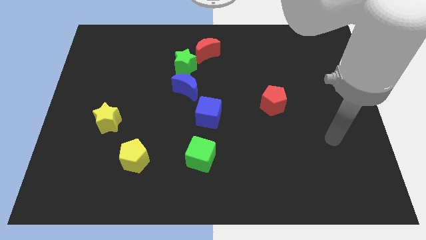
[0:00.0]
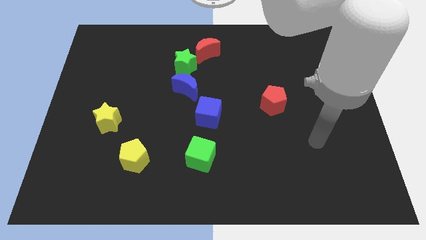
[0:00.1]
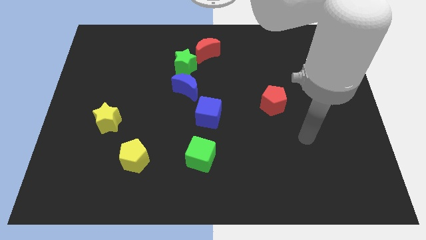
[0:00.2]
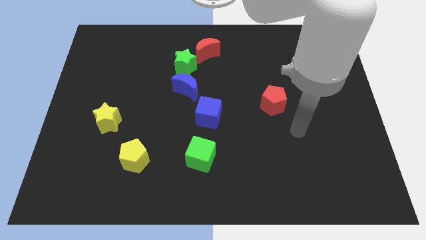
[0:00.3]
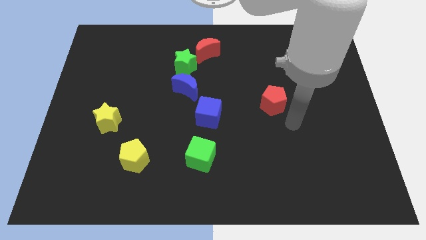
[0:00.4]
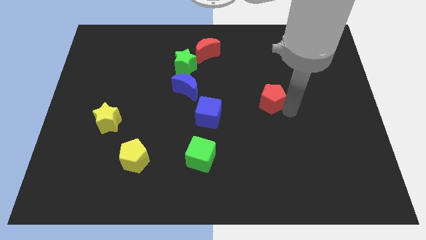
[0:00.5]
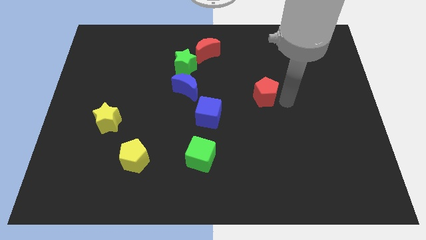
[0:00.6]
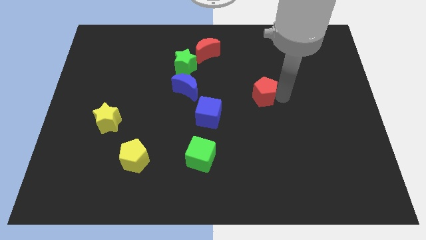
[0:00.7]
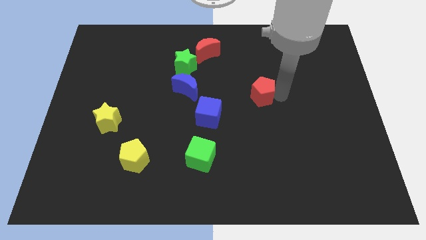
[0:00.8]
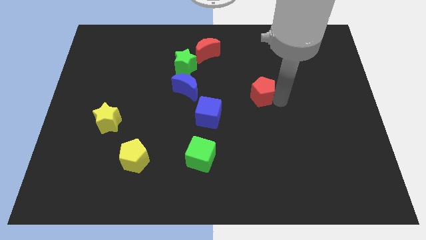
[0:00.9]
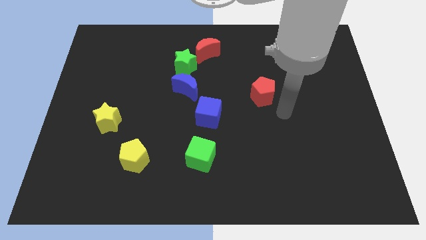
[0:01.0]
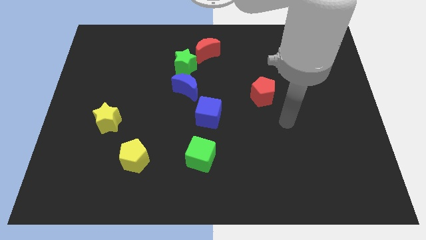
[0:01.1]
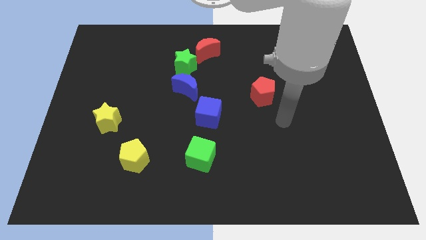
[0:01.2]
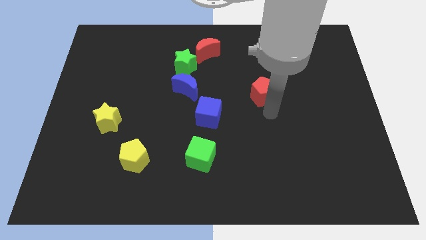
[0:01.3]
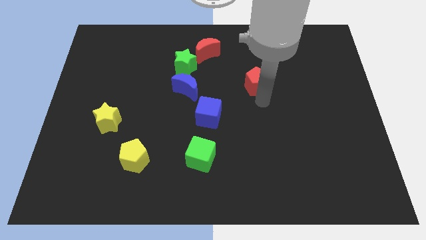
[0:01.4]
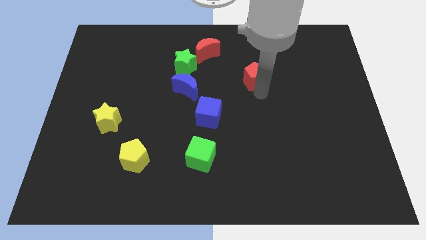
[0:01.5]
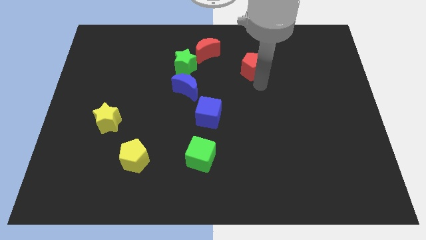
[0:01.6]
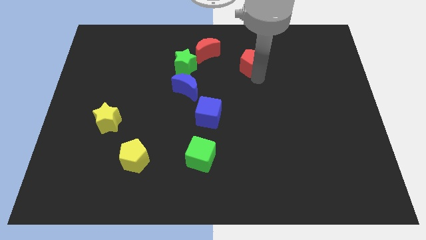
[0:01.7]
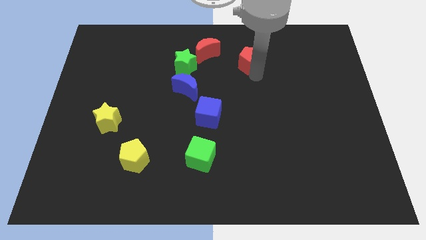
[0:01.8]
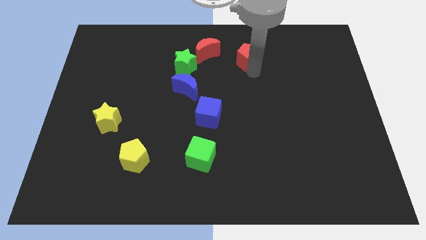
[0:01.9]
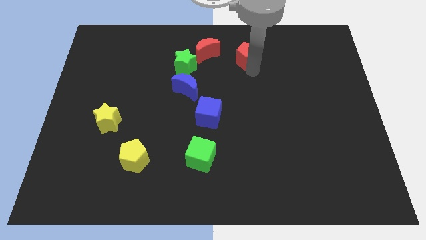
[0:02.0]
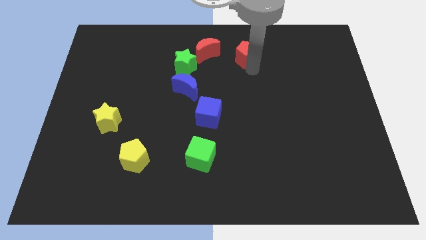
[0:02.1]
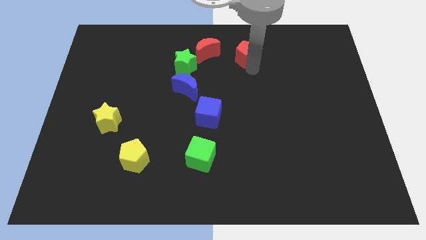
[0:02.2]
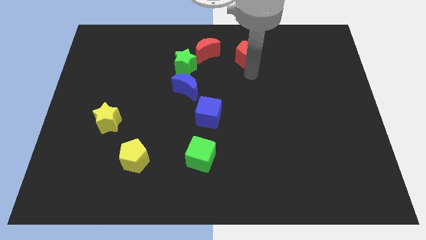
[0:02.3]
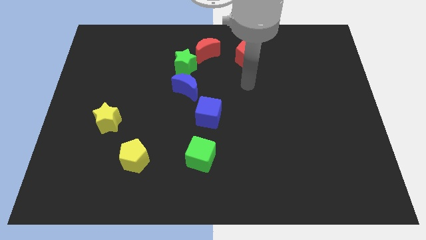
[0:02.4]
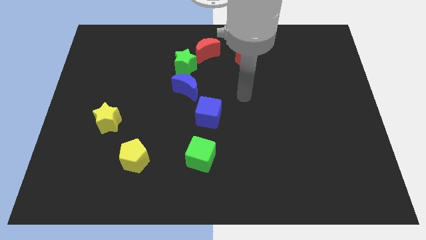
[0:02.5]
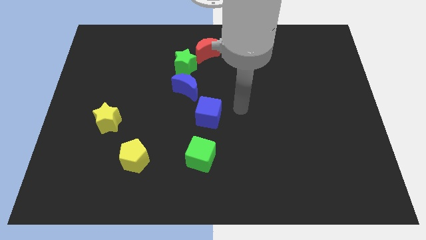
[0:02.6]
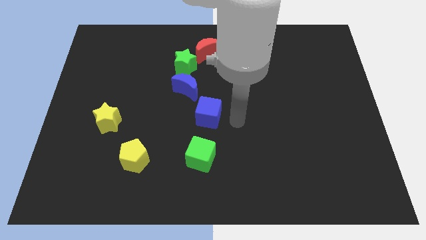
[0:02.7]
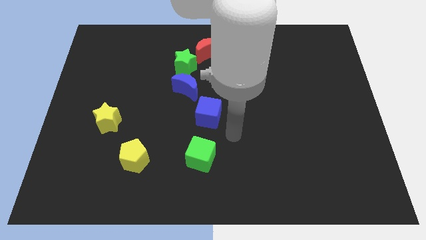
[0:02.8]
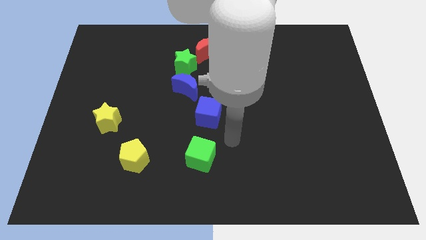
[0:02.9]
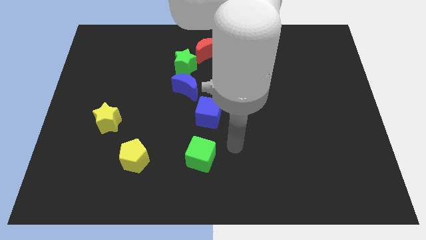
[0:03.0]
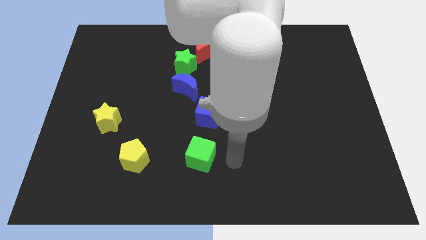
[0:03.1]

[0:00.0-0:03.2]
move the red pentagon close to the red crescent

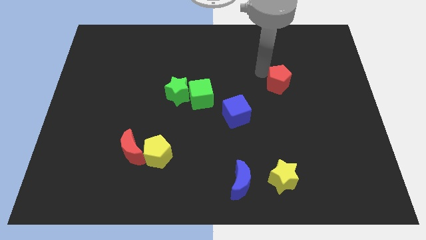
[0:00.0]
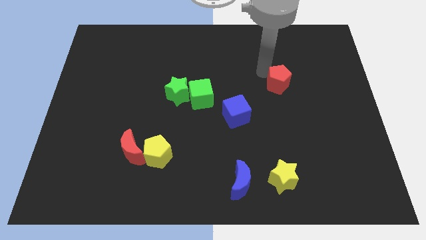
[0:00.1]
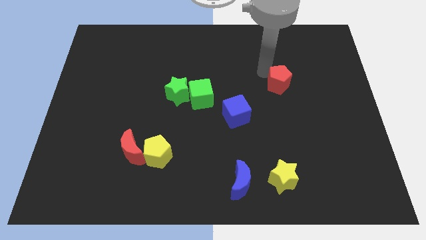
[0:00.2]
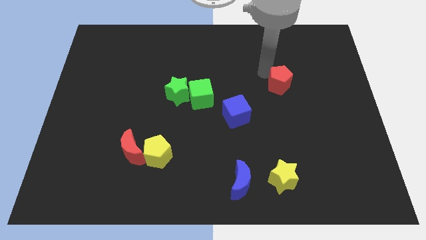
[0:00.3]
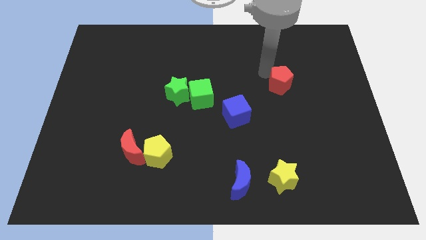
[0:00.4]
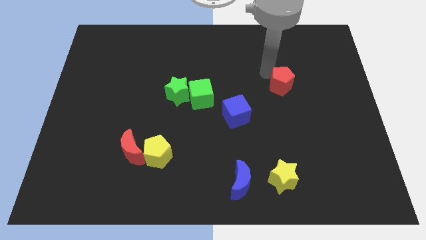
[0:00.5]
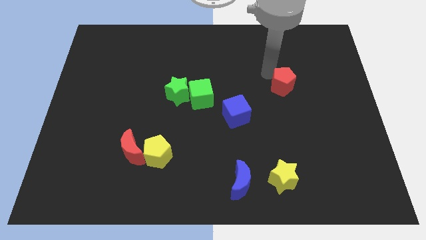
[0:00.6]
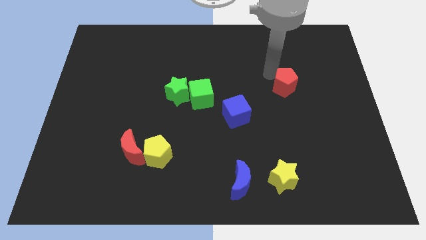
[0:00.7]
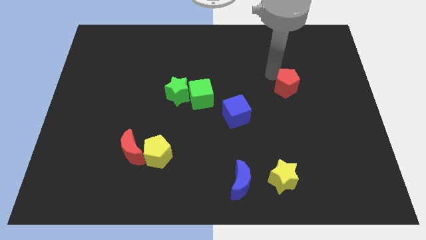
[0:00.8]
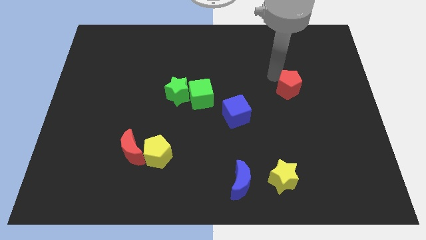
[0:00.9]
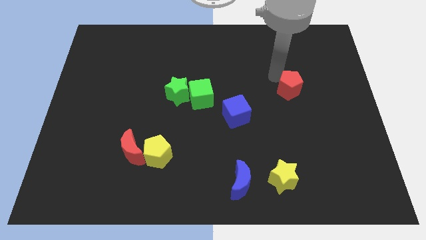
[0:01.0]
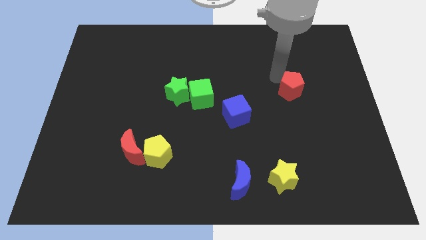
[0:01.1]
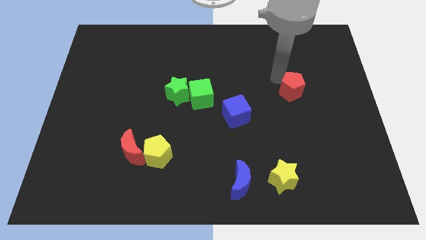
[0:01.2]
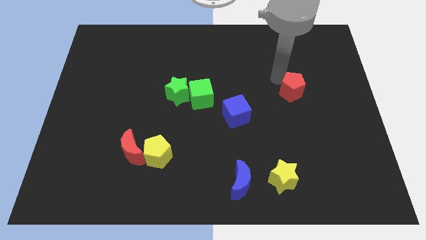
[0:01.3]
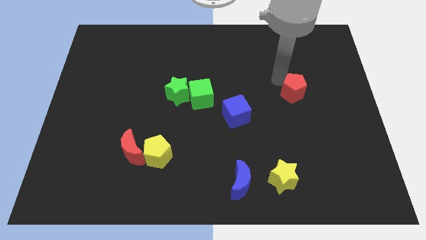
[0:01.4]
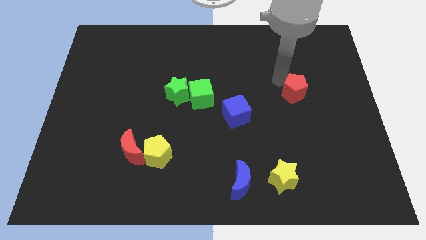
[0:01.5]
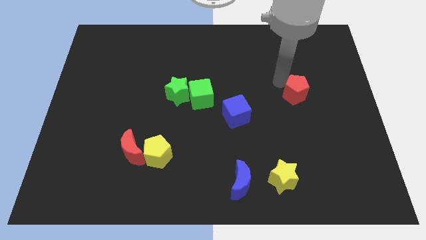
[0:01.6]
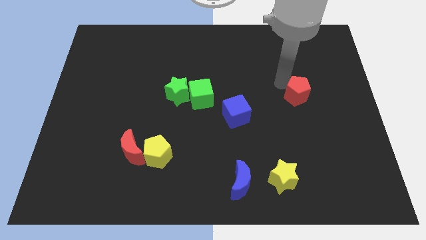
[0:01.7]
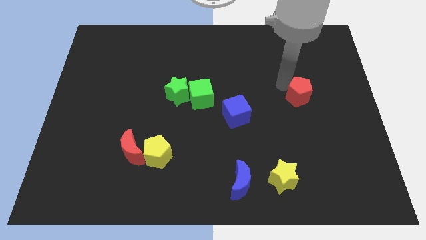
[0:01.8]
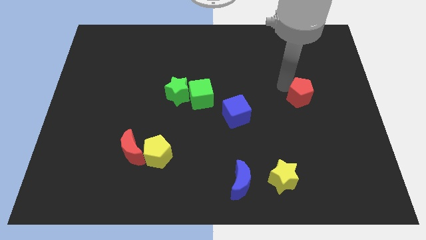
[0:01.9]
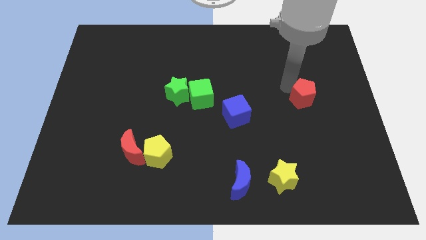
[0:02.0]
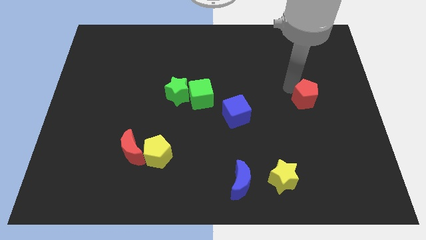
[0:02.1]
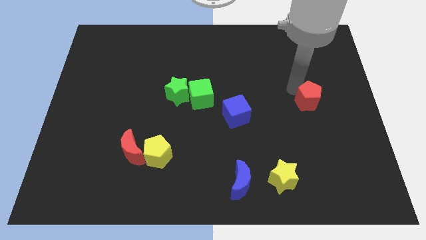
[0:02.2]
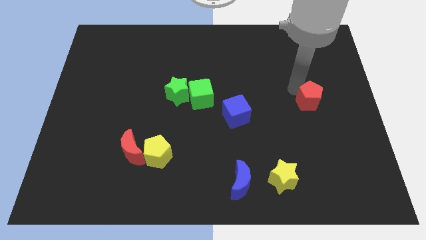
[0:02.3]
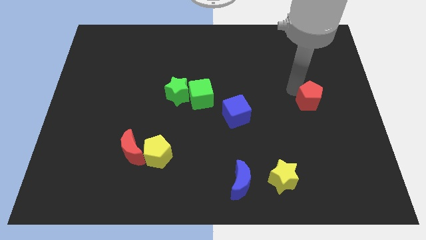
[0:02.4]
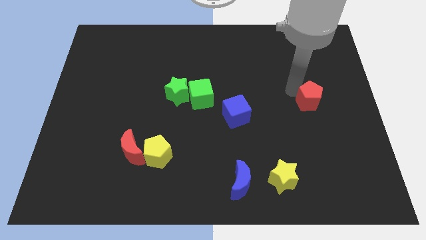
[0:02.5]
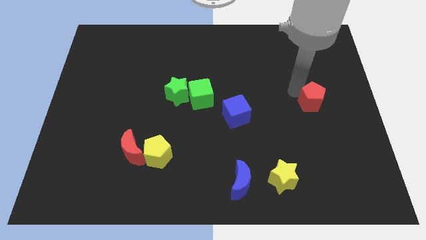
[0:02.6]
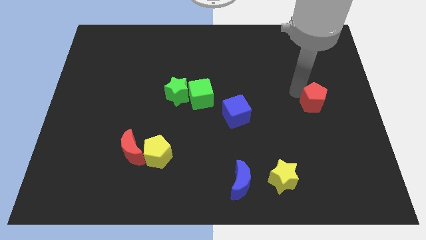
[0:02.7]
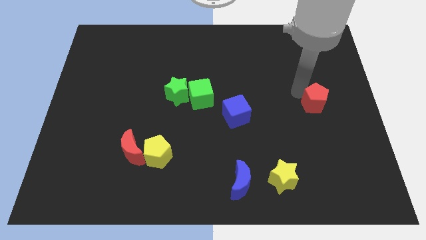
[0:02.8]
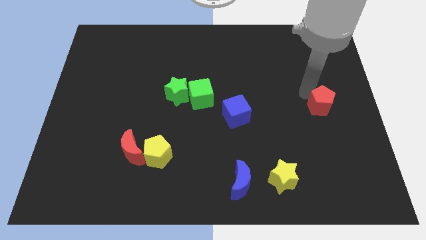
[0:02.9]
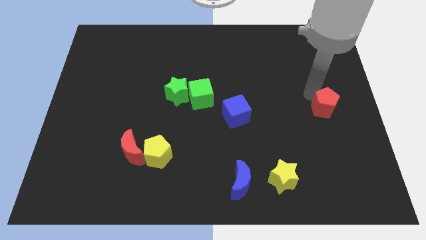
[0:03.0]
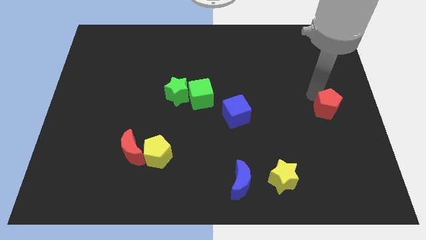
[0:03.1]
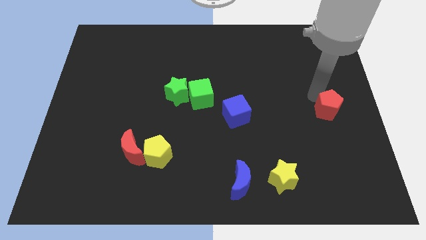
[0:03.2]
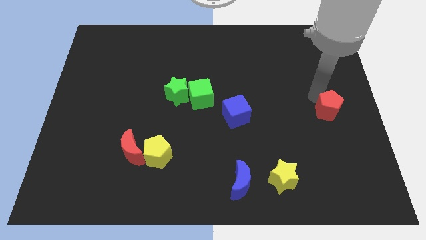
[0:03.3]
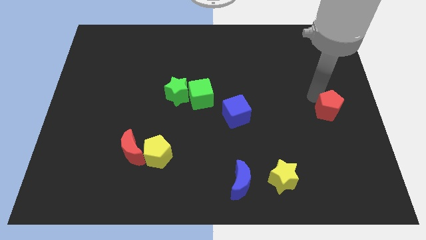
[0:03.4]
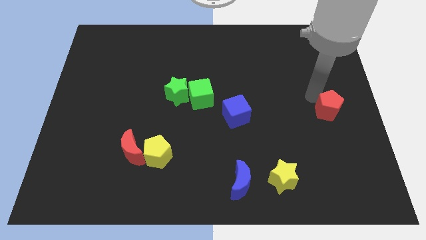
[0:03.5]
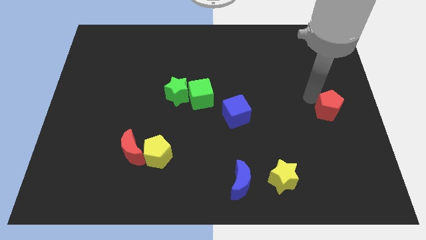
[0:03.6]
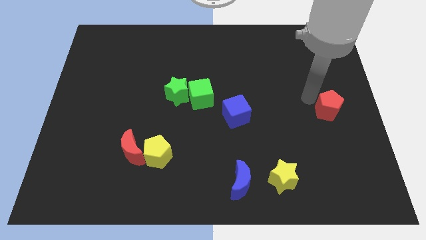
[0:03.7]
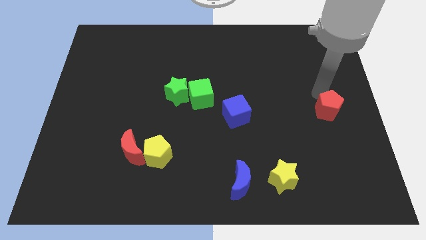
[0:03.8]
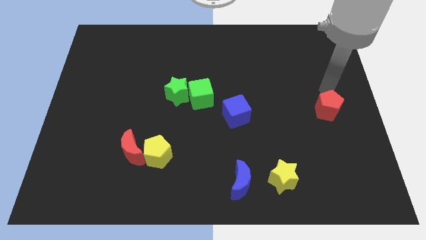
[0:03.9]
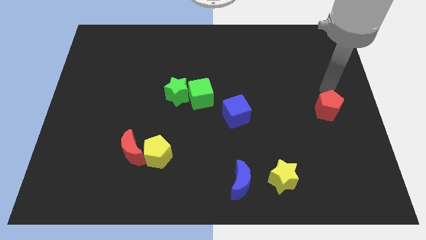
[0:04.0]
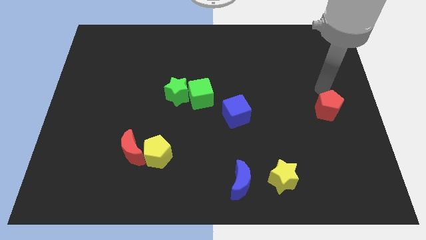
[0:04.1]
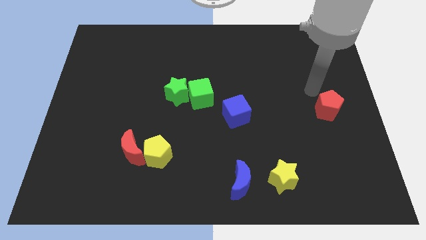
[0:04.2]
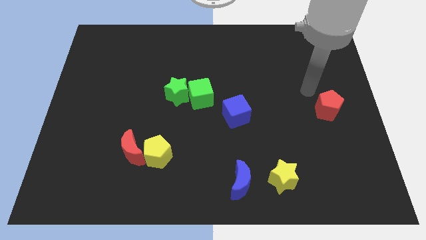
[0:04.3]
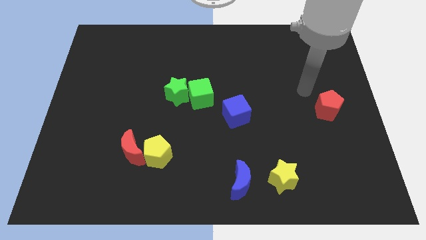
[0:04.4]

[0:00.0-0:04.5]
place the red pentagon to the right of the blue cube

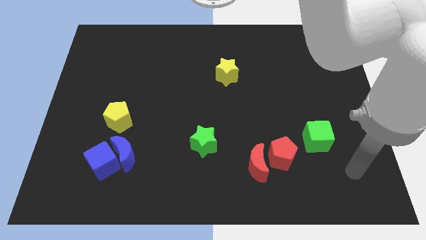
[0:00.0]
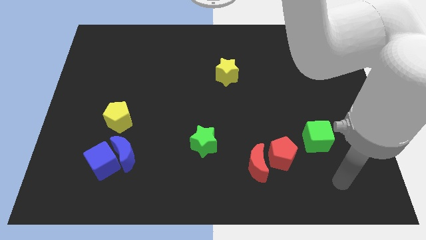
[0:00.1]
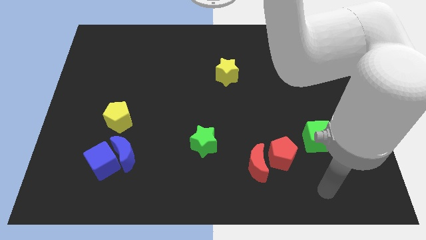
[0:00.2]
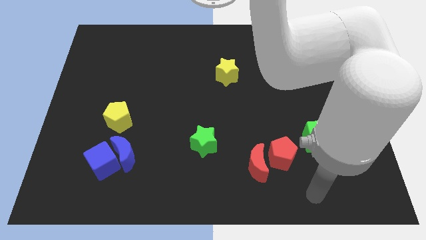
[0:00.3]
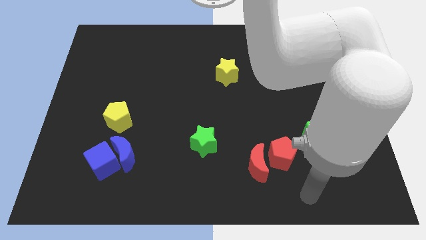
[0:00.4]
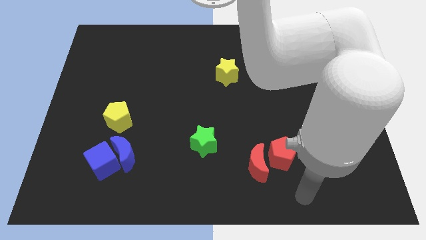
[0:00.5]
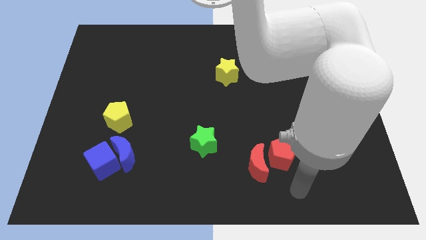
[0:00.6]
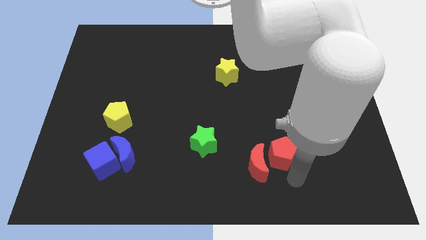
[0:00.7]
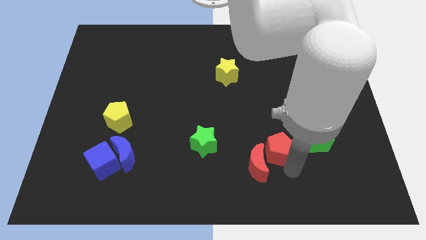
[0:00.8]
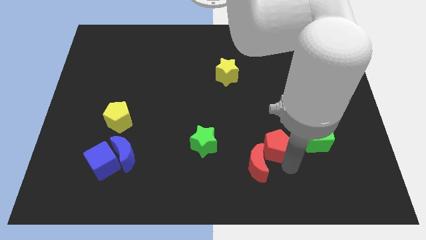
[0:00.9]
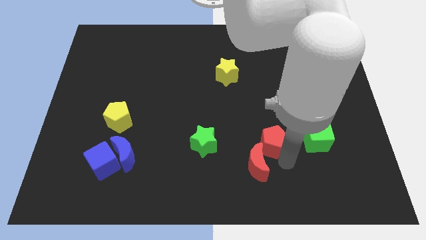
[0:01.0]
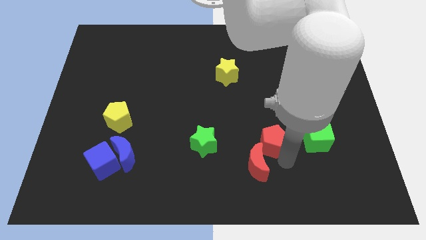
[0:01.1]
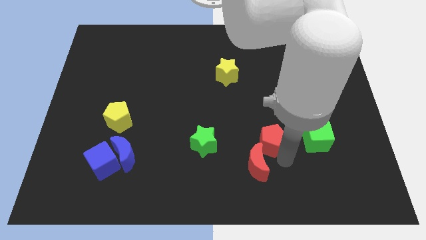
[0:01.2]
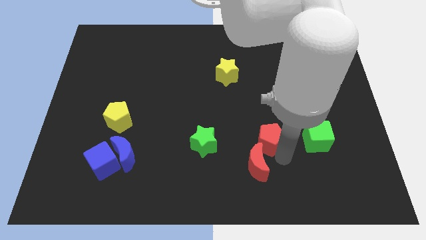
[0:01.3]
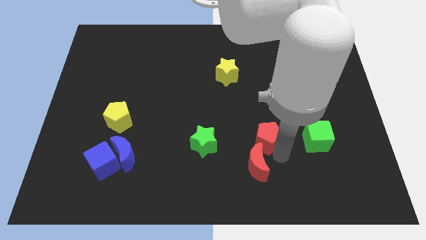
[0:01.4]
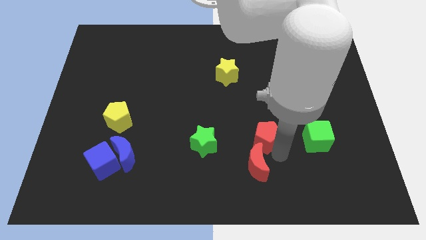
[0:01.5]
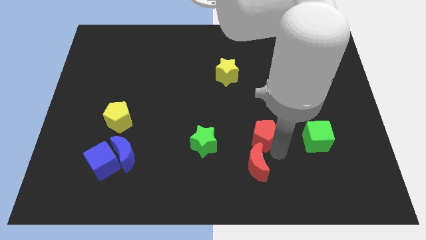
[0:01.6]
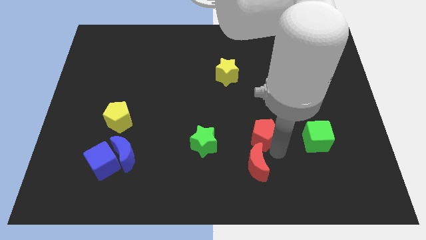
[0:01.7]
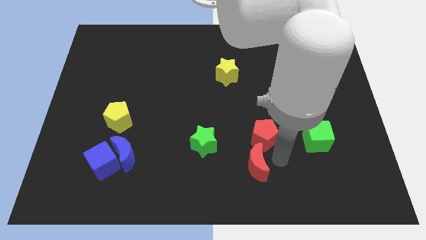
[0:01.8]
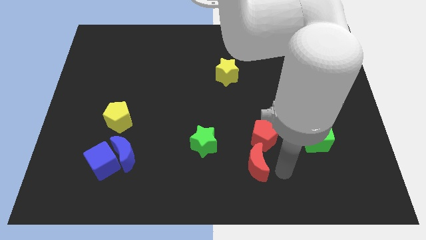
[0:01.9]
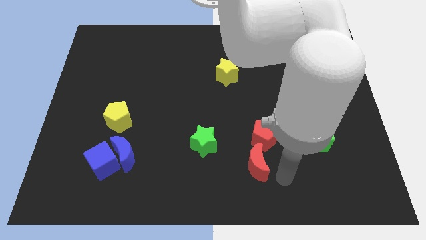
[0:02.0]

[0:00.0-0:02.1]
slightly push the red pentagon horizontally in between green blocks
